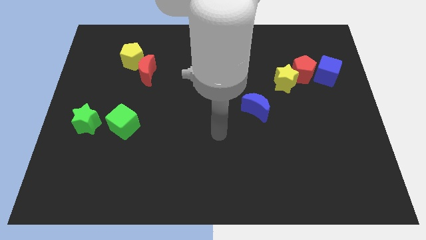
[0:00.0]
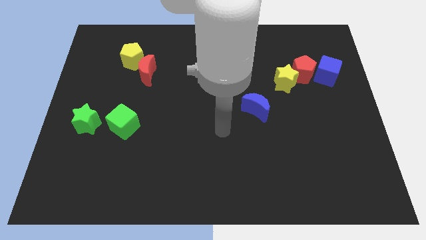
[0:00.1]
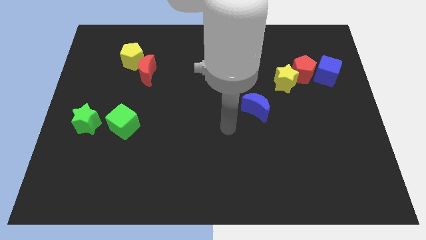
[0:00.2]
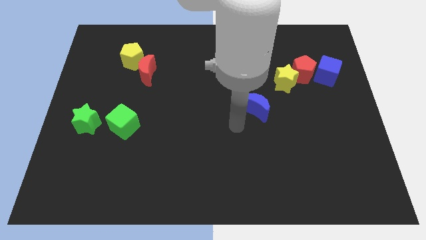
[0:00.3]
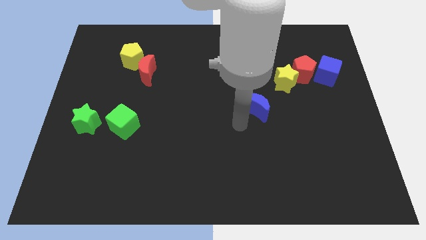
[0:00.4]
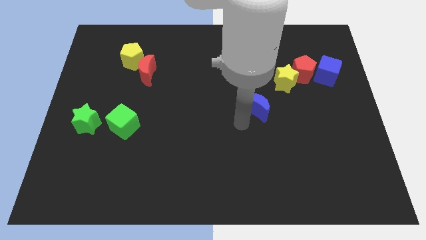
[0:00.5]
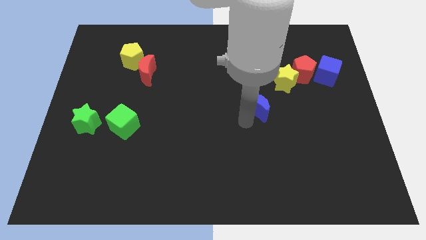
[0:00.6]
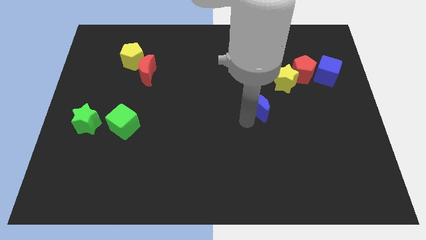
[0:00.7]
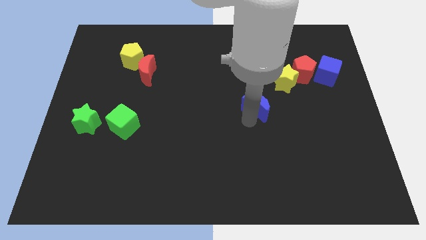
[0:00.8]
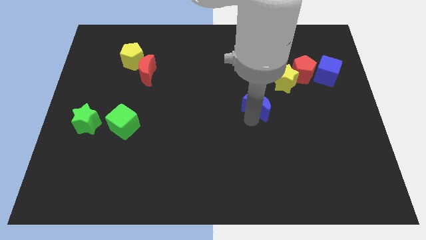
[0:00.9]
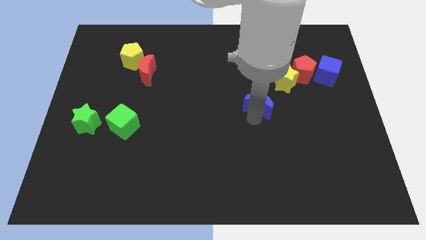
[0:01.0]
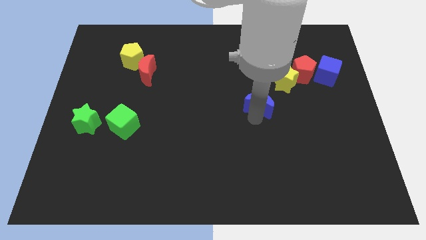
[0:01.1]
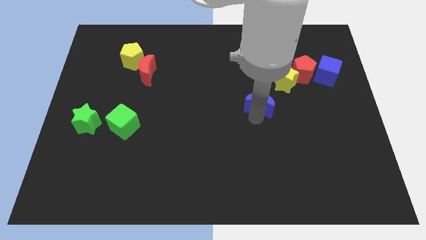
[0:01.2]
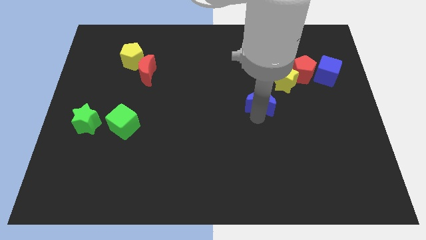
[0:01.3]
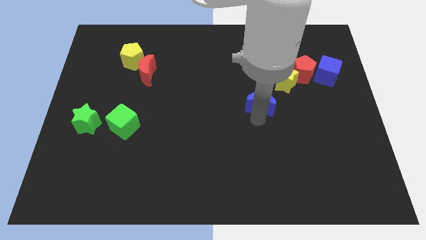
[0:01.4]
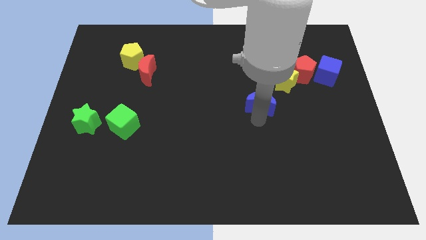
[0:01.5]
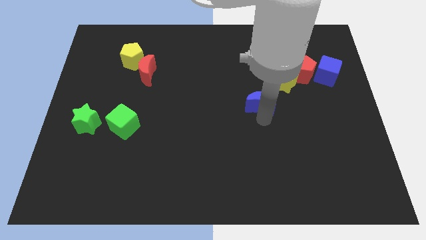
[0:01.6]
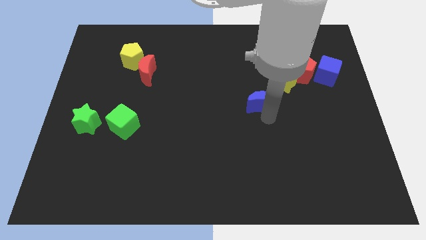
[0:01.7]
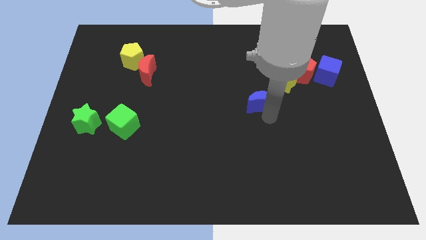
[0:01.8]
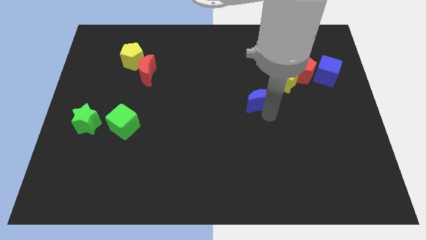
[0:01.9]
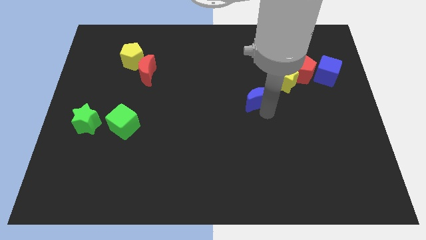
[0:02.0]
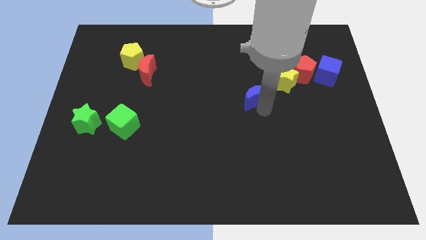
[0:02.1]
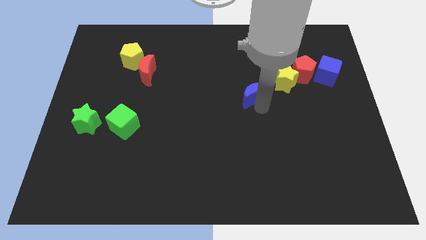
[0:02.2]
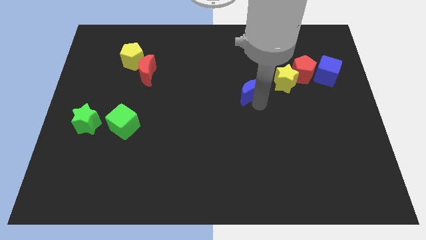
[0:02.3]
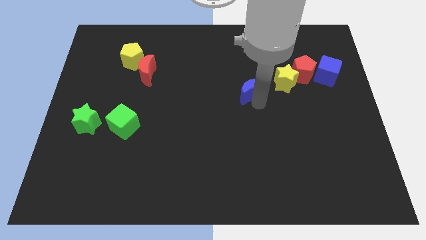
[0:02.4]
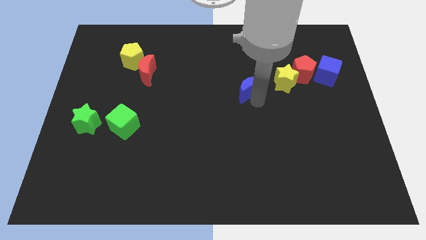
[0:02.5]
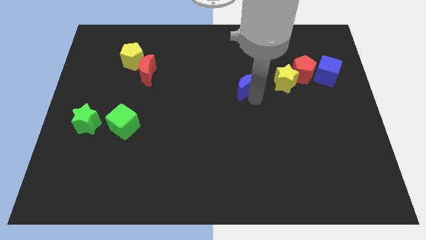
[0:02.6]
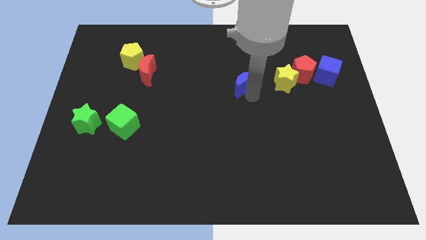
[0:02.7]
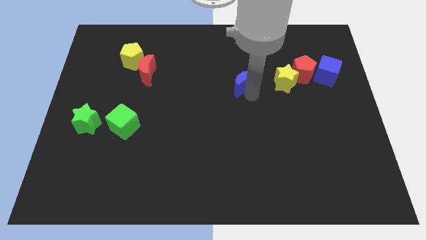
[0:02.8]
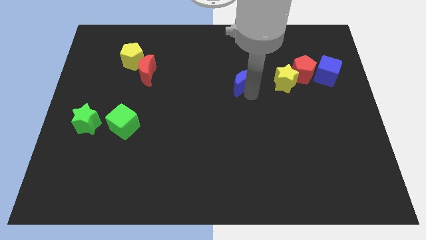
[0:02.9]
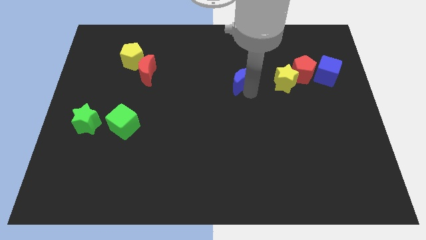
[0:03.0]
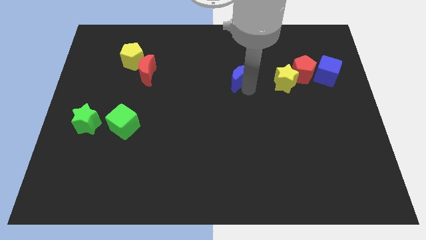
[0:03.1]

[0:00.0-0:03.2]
move the blue moon to the left side of the yellow star

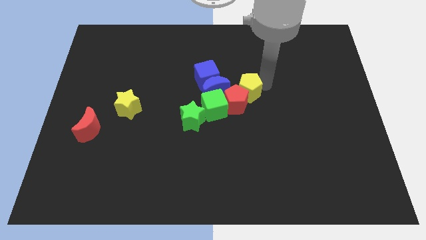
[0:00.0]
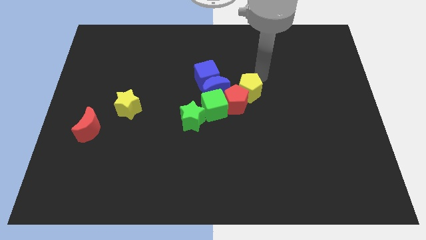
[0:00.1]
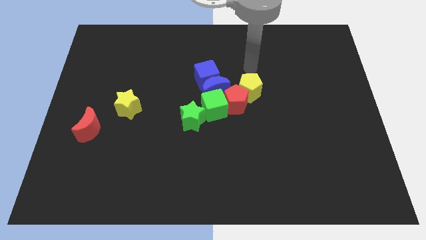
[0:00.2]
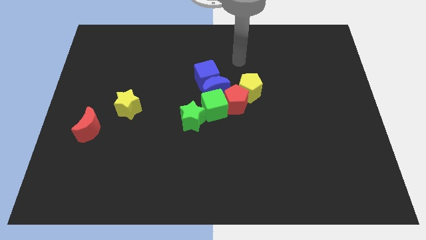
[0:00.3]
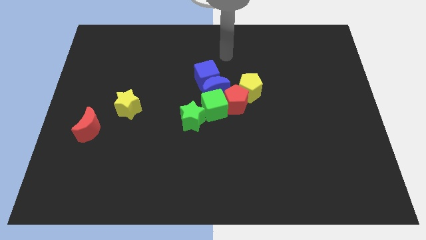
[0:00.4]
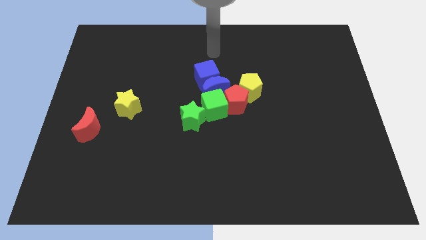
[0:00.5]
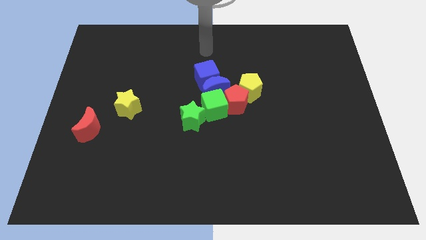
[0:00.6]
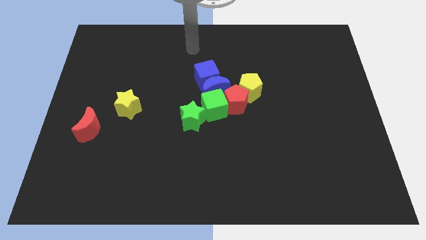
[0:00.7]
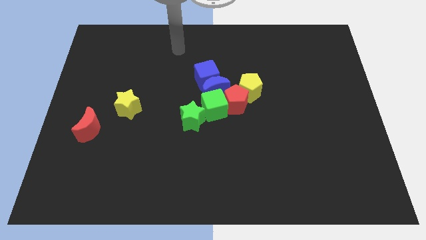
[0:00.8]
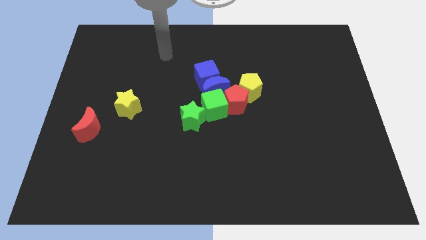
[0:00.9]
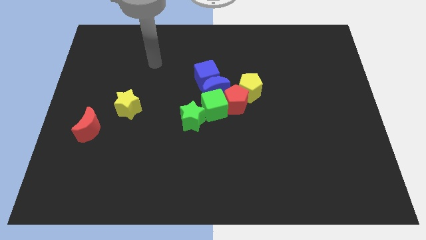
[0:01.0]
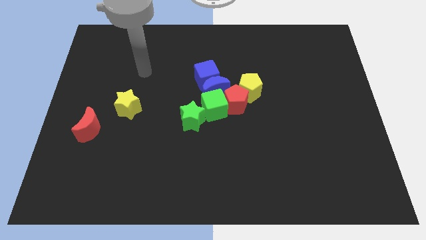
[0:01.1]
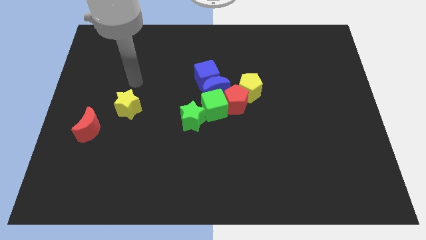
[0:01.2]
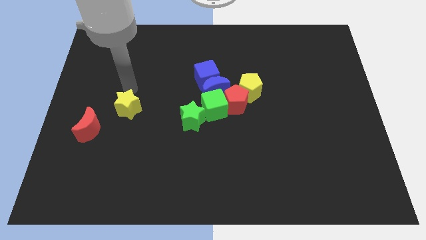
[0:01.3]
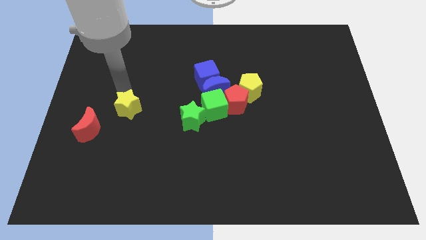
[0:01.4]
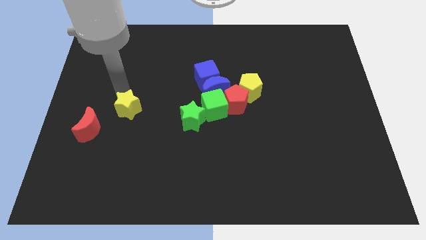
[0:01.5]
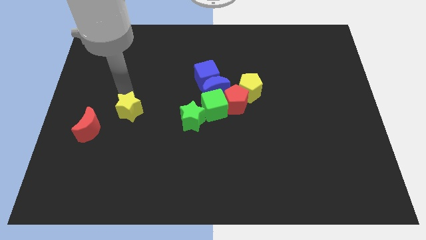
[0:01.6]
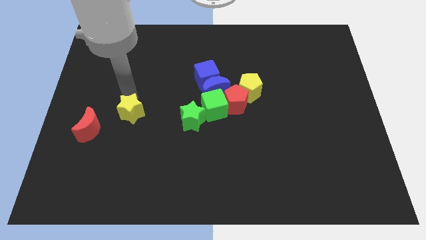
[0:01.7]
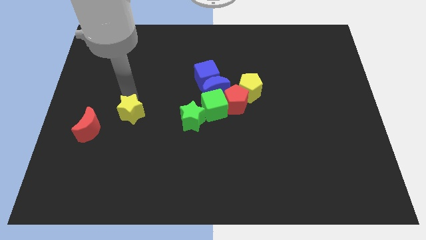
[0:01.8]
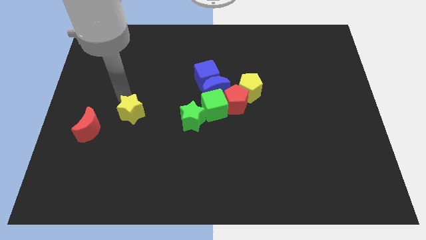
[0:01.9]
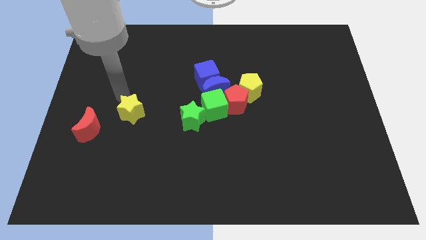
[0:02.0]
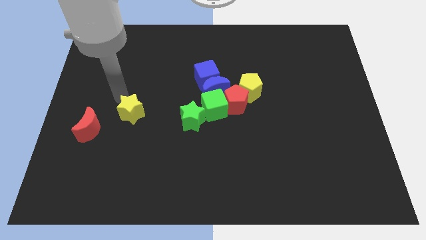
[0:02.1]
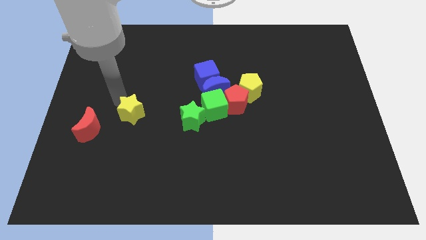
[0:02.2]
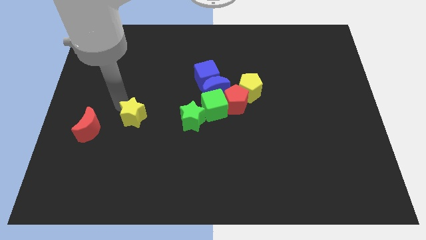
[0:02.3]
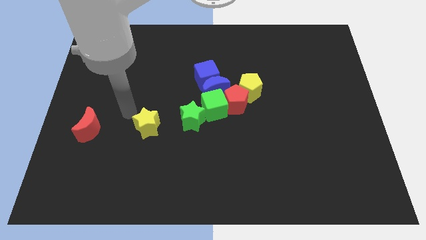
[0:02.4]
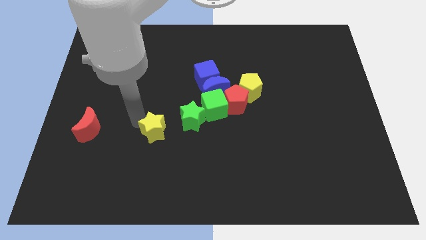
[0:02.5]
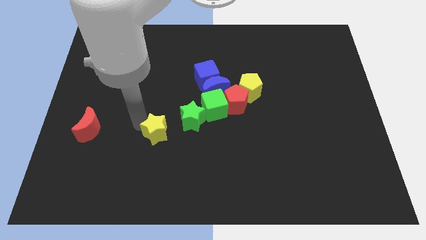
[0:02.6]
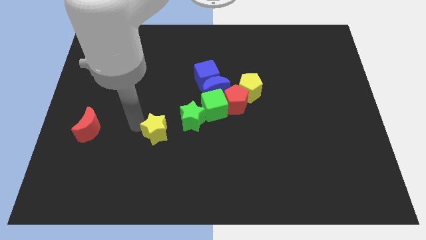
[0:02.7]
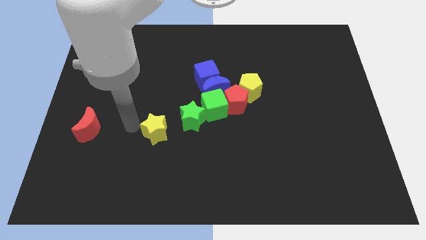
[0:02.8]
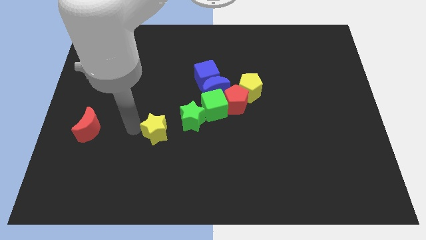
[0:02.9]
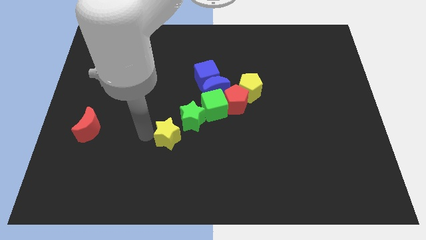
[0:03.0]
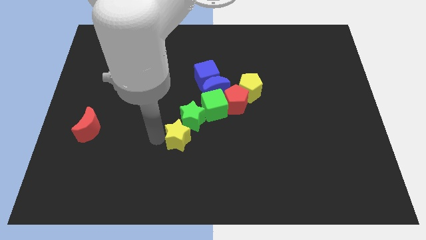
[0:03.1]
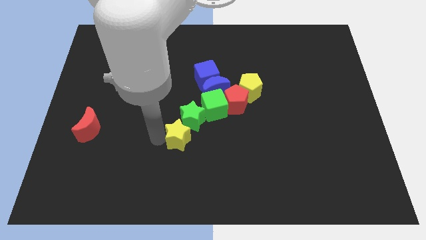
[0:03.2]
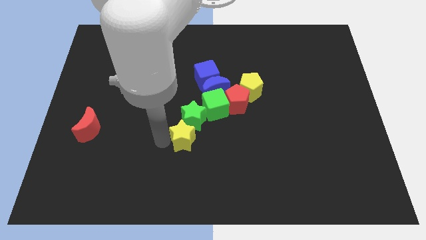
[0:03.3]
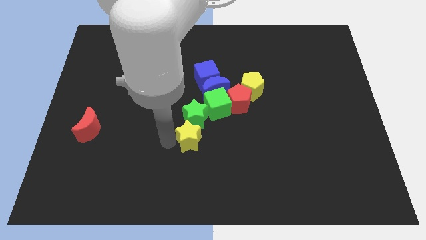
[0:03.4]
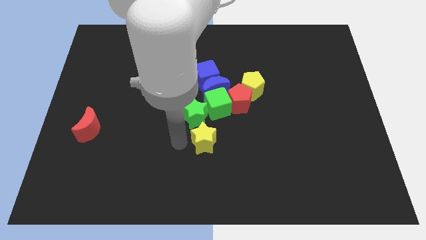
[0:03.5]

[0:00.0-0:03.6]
place the yellow star at the bottom left side of green star

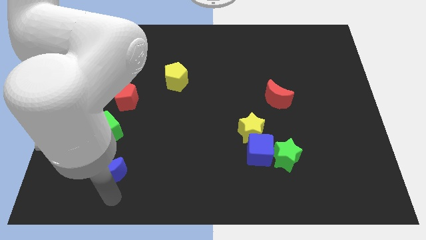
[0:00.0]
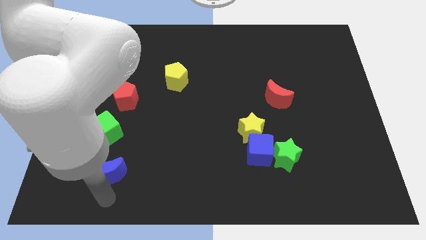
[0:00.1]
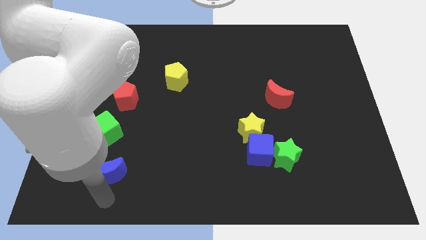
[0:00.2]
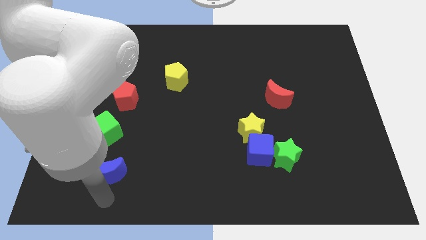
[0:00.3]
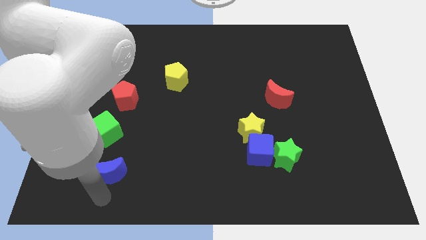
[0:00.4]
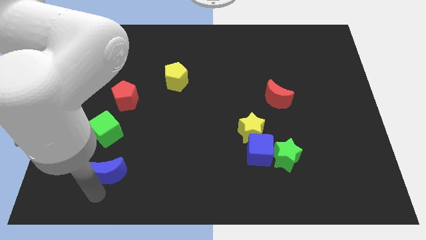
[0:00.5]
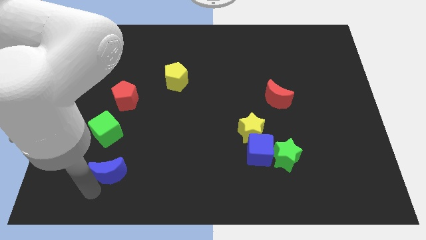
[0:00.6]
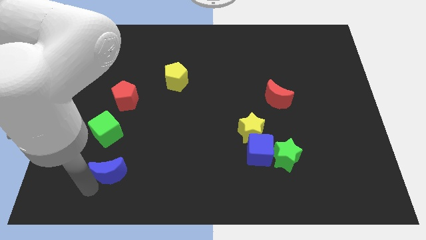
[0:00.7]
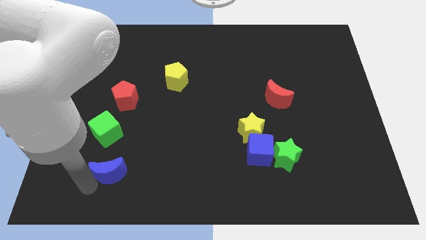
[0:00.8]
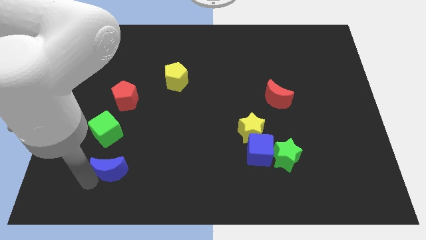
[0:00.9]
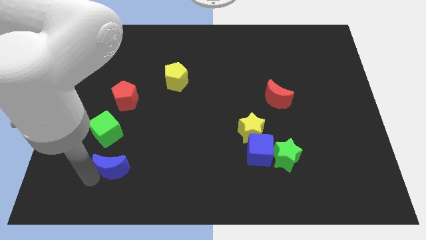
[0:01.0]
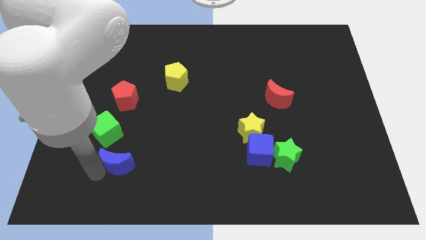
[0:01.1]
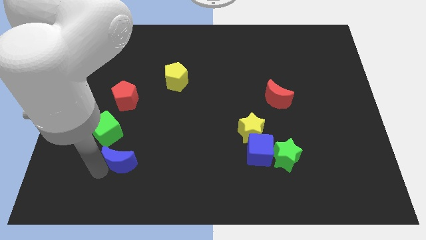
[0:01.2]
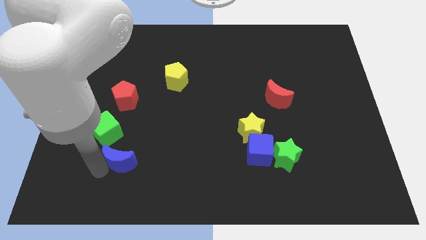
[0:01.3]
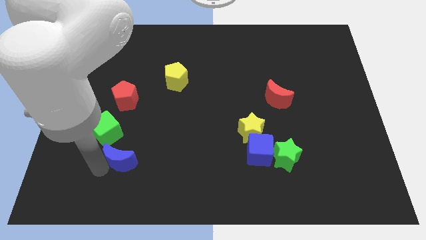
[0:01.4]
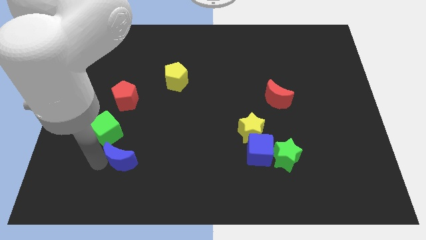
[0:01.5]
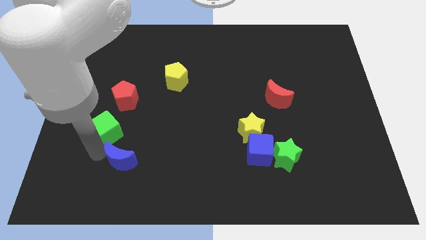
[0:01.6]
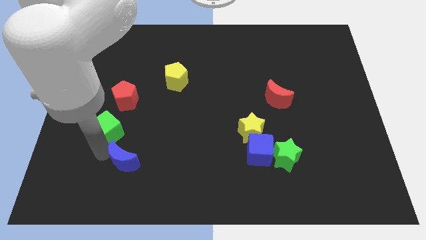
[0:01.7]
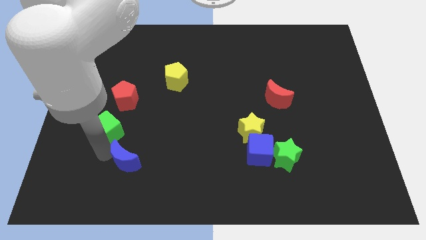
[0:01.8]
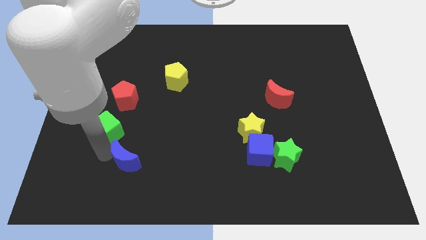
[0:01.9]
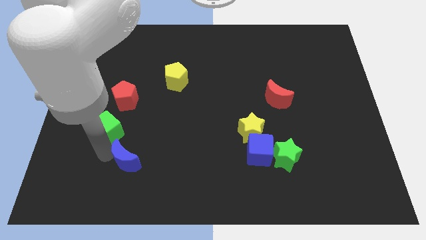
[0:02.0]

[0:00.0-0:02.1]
move blue moon close to green cube
